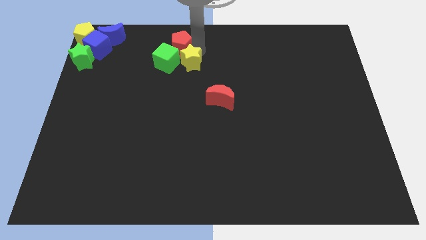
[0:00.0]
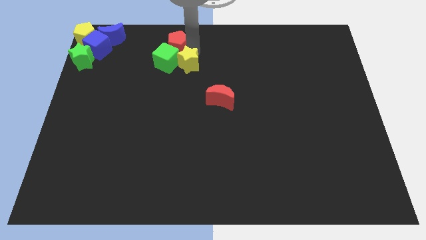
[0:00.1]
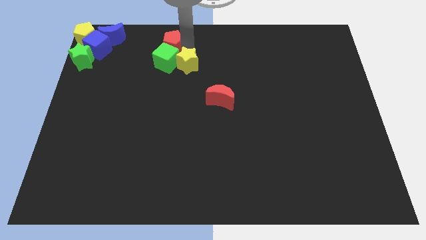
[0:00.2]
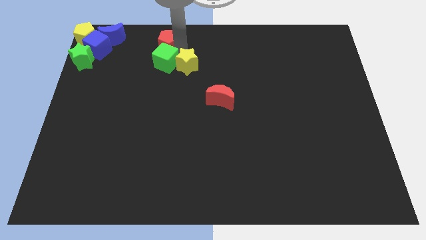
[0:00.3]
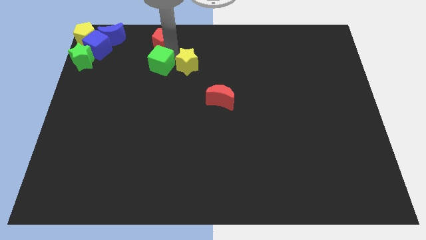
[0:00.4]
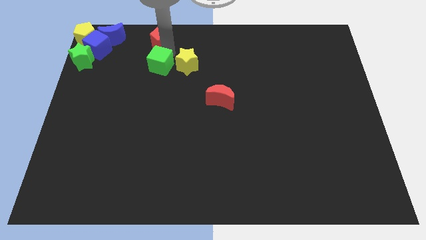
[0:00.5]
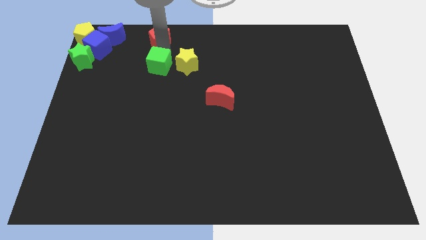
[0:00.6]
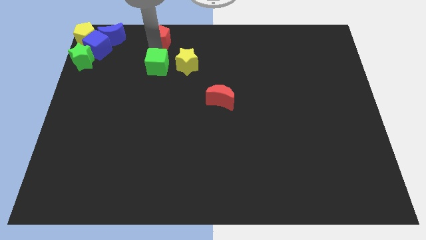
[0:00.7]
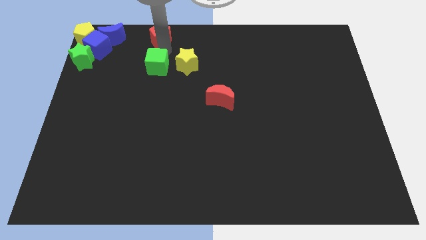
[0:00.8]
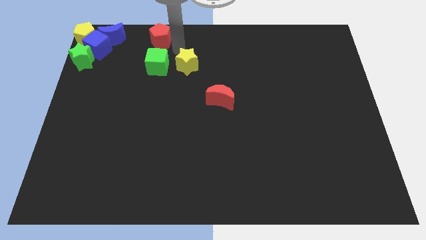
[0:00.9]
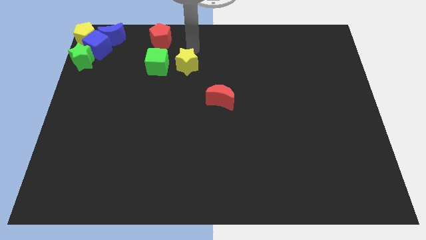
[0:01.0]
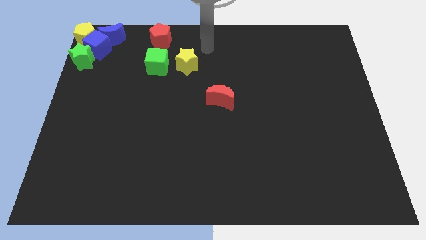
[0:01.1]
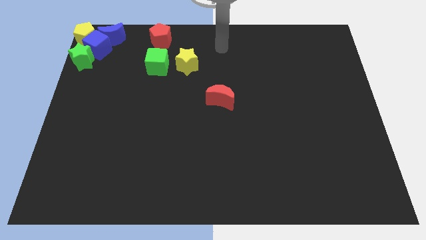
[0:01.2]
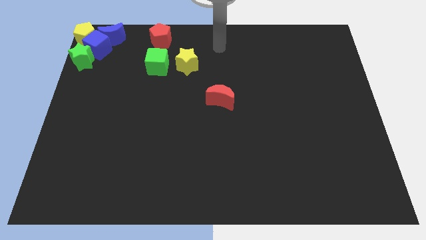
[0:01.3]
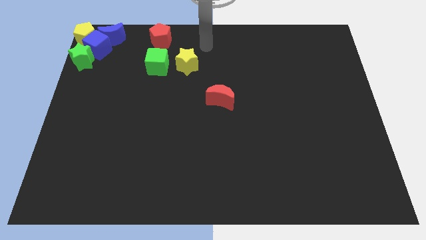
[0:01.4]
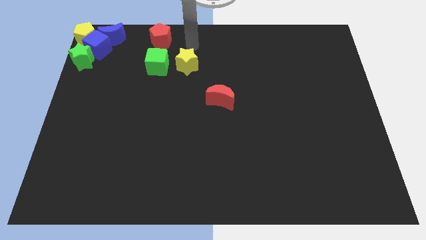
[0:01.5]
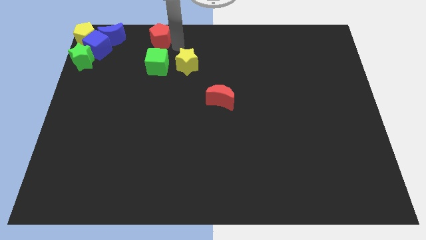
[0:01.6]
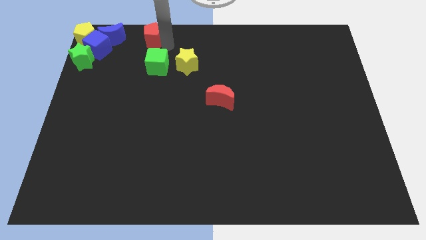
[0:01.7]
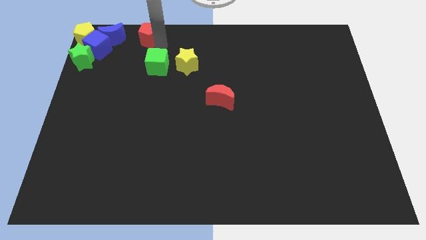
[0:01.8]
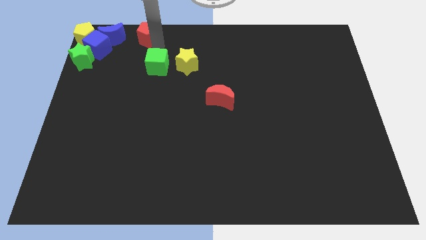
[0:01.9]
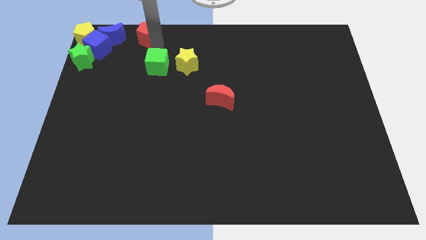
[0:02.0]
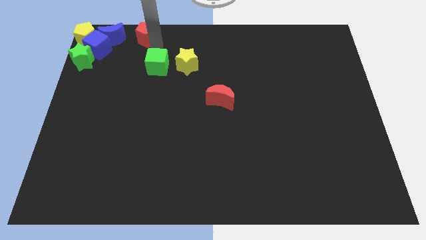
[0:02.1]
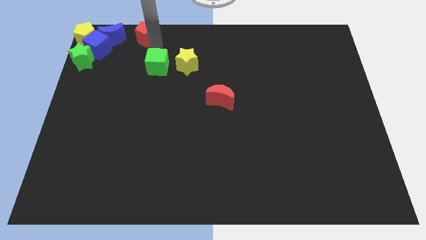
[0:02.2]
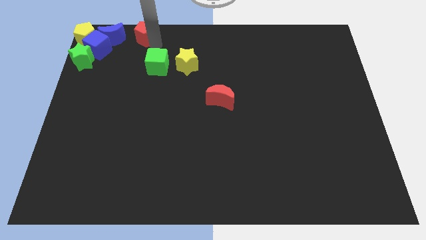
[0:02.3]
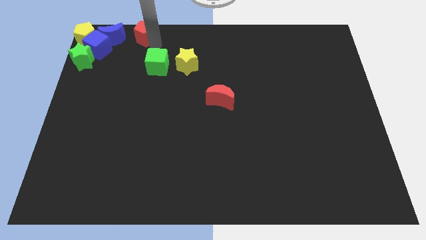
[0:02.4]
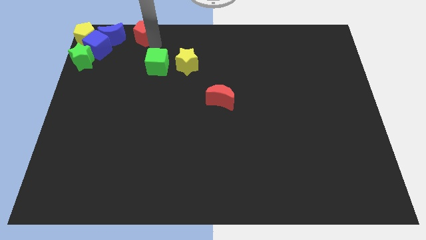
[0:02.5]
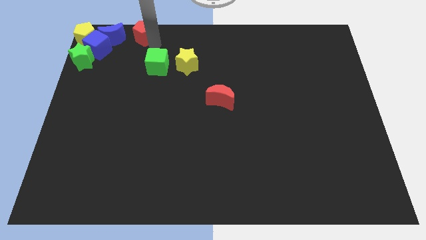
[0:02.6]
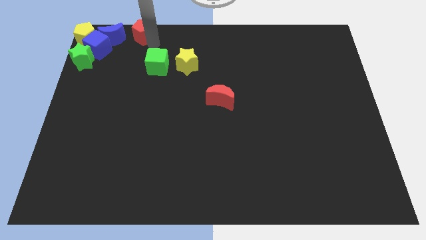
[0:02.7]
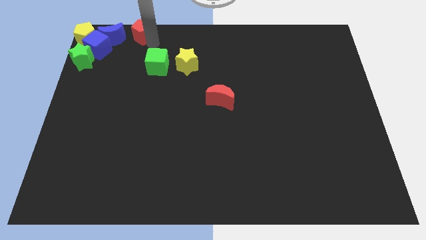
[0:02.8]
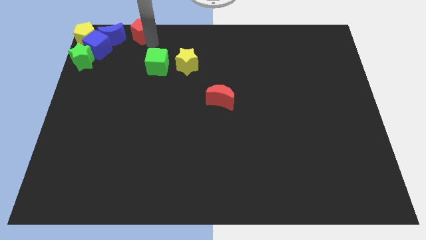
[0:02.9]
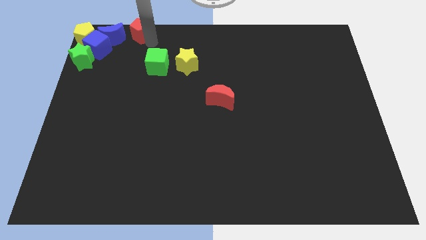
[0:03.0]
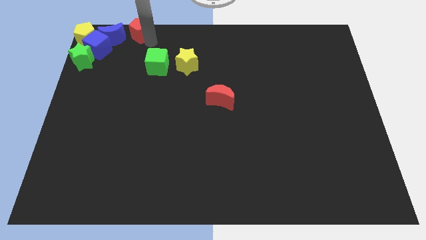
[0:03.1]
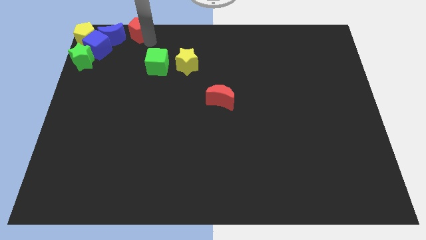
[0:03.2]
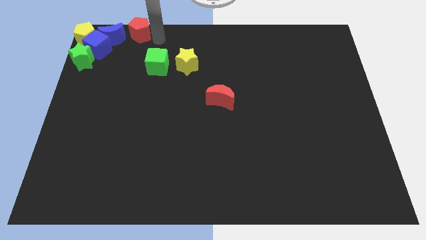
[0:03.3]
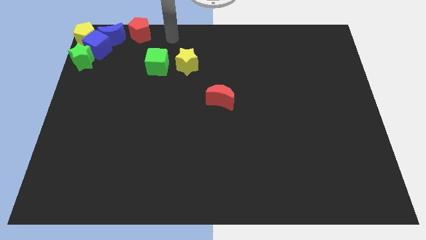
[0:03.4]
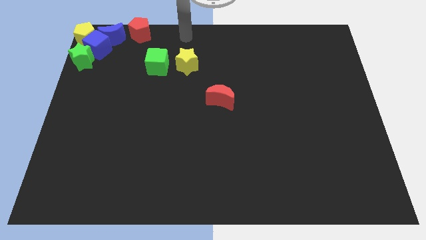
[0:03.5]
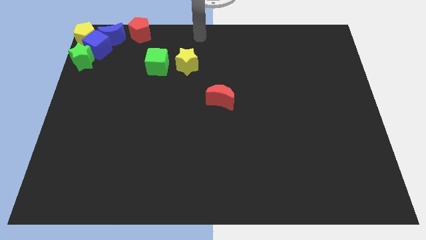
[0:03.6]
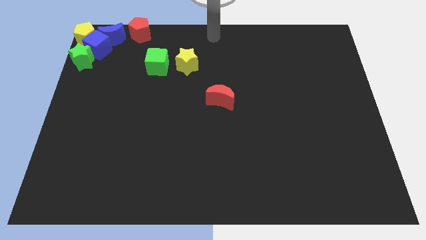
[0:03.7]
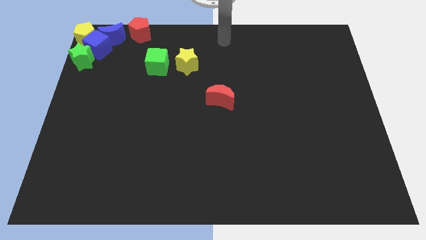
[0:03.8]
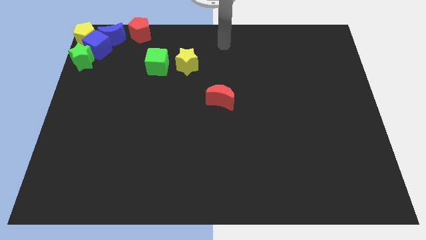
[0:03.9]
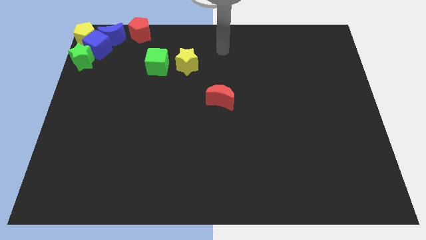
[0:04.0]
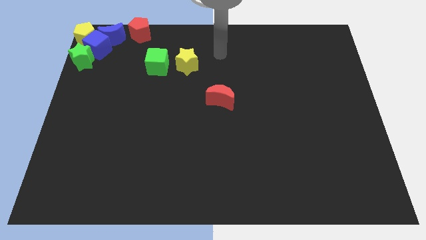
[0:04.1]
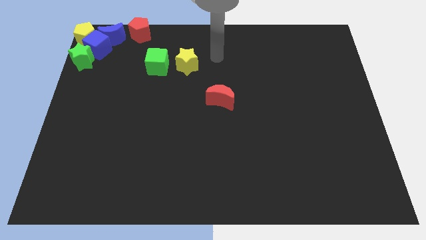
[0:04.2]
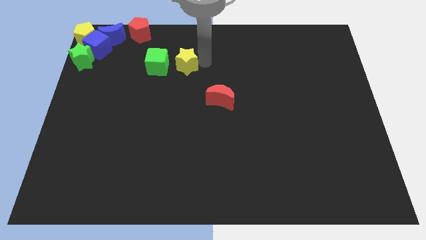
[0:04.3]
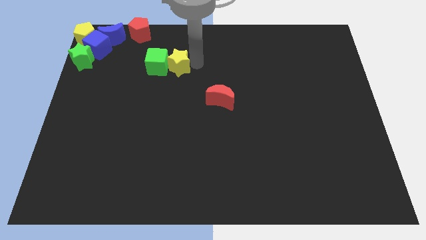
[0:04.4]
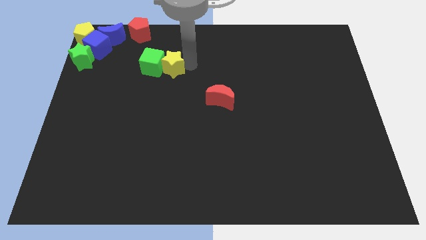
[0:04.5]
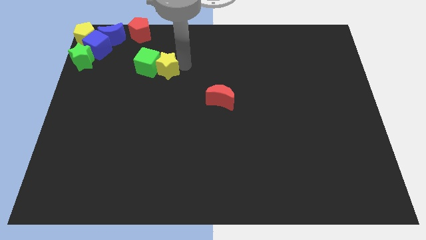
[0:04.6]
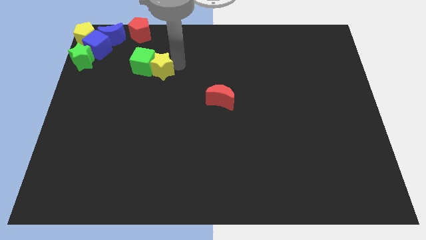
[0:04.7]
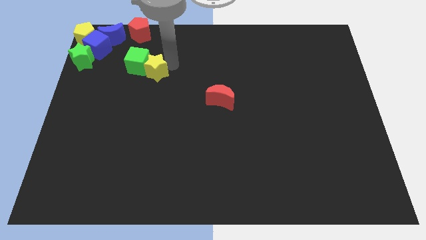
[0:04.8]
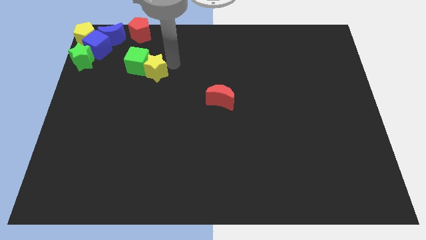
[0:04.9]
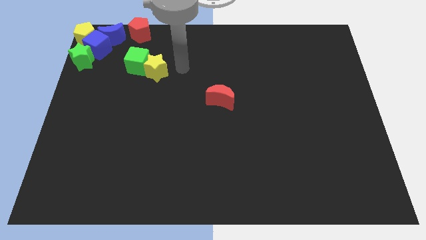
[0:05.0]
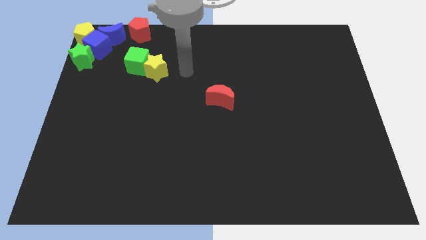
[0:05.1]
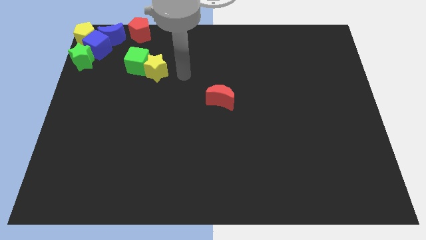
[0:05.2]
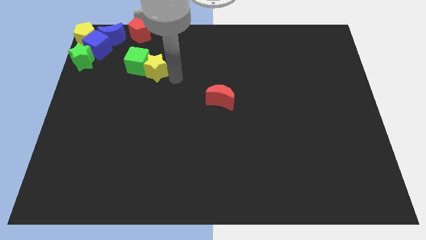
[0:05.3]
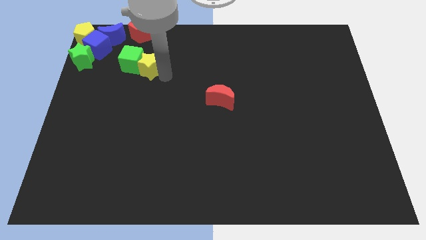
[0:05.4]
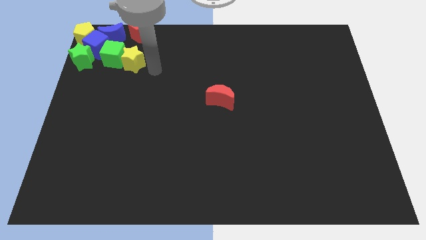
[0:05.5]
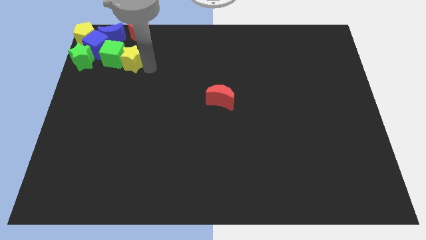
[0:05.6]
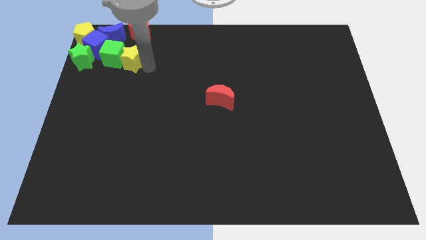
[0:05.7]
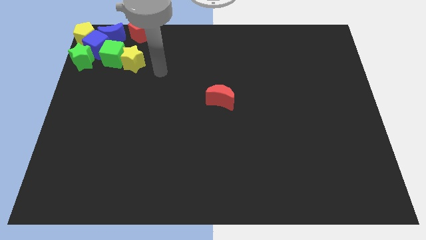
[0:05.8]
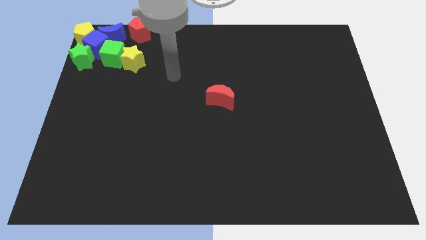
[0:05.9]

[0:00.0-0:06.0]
push the yellow star and green cube into the blue cube

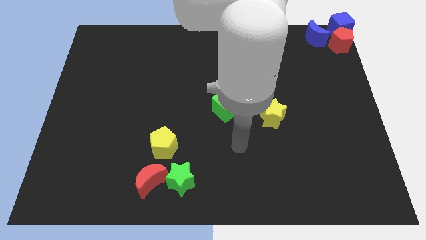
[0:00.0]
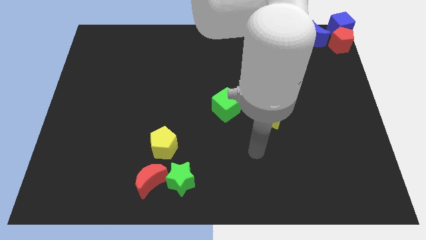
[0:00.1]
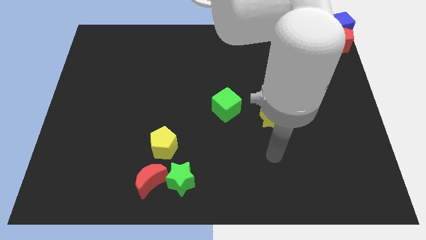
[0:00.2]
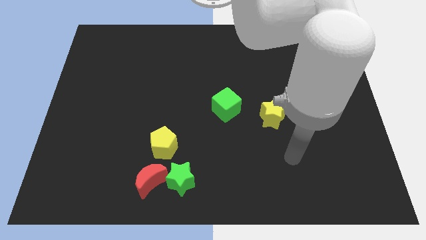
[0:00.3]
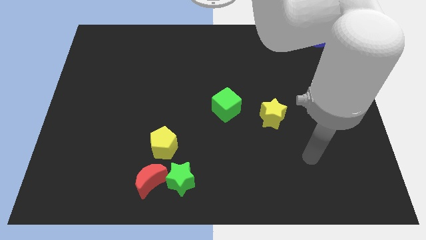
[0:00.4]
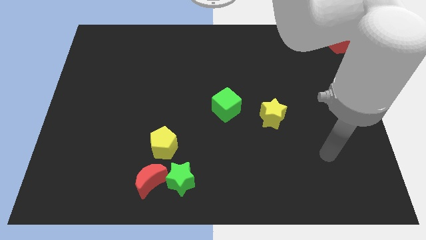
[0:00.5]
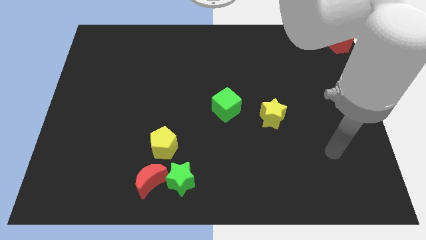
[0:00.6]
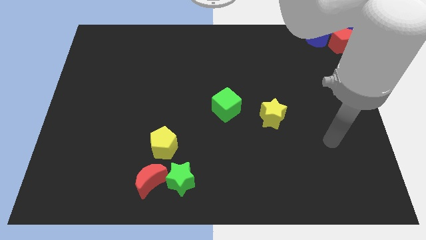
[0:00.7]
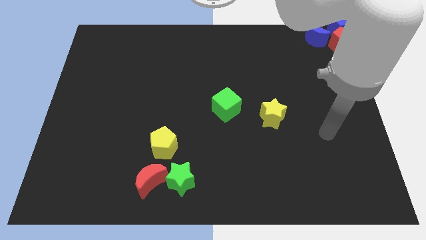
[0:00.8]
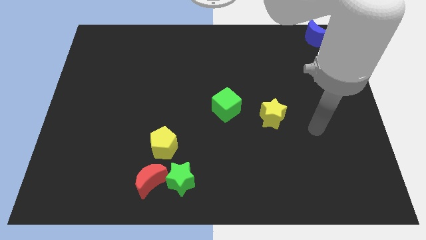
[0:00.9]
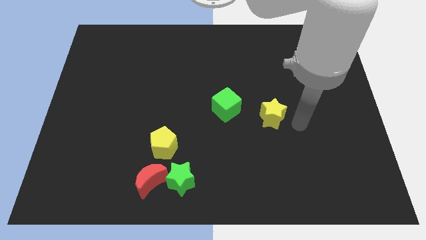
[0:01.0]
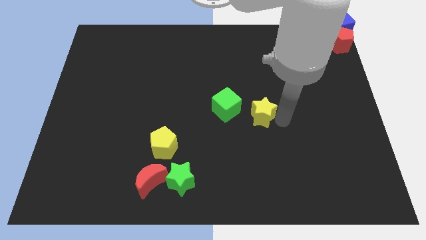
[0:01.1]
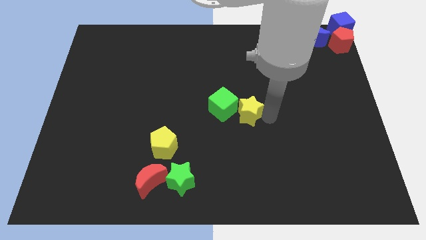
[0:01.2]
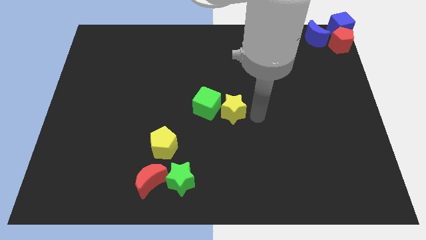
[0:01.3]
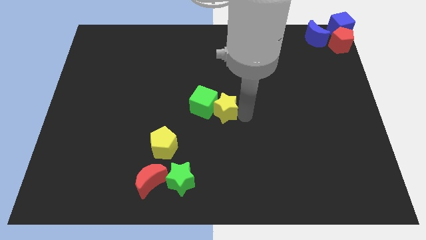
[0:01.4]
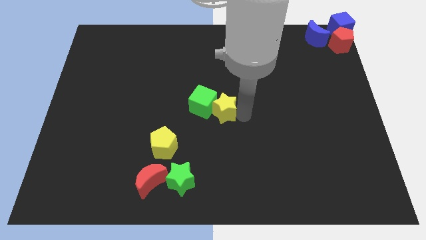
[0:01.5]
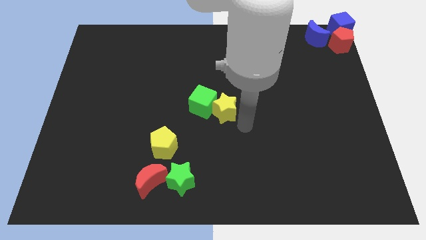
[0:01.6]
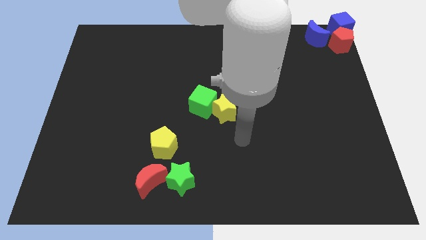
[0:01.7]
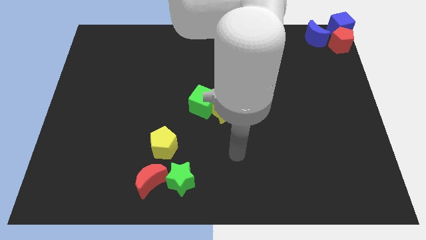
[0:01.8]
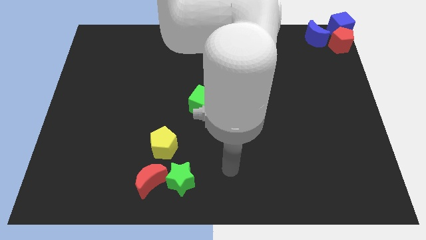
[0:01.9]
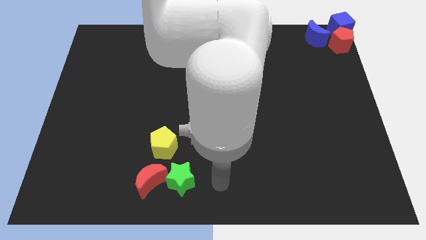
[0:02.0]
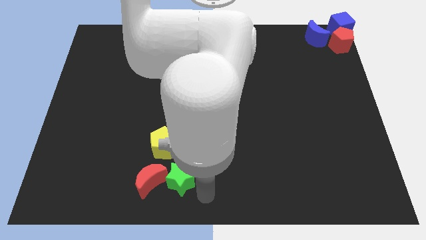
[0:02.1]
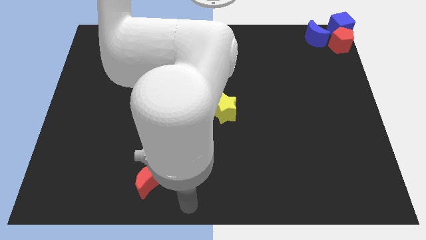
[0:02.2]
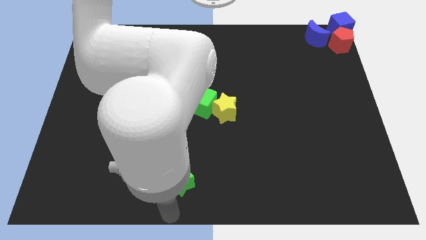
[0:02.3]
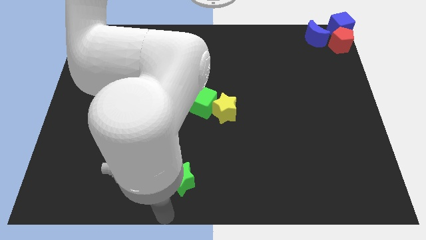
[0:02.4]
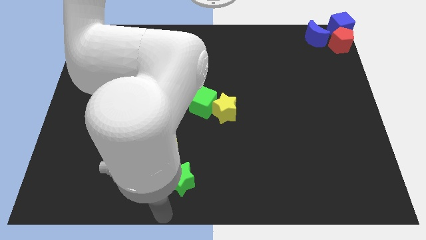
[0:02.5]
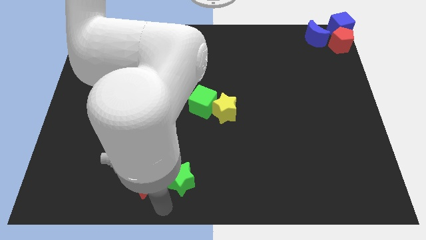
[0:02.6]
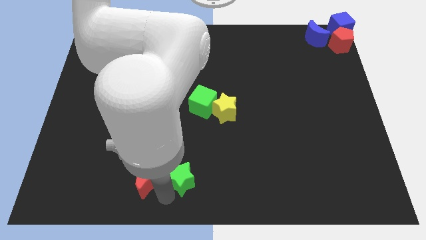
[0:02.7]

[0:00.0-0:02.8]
move the yellow star along the green cube to the center of the board
